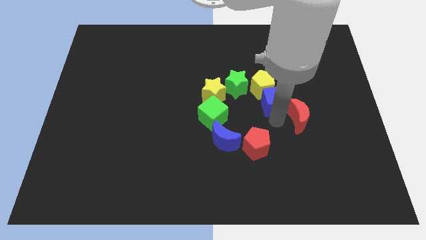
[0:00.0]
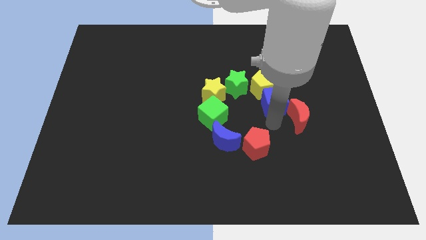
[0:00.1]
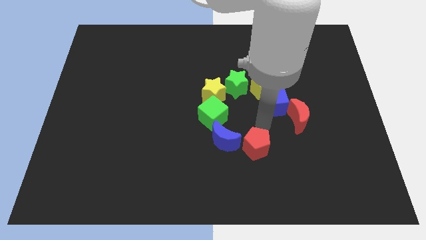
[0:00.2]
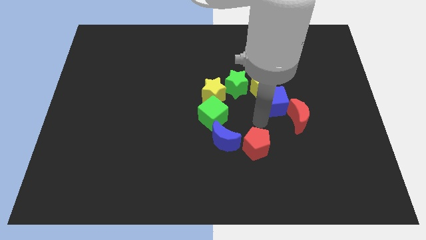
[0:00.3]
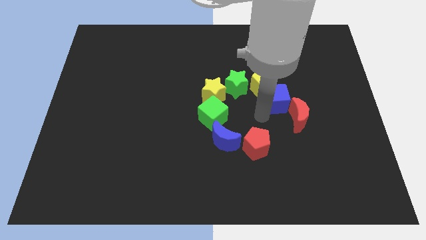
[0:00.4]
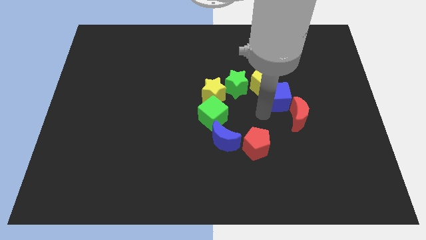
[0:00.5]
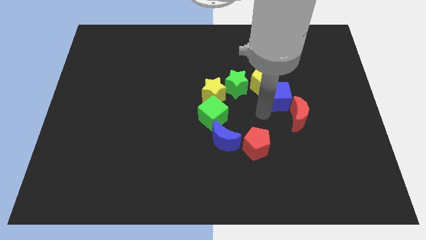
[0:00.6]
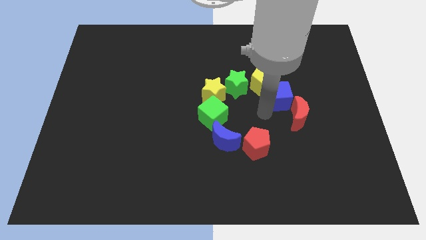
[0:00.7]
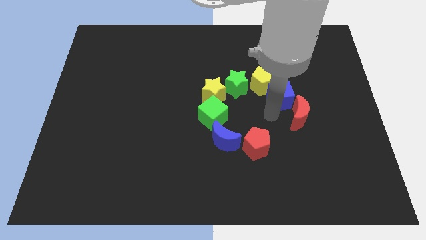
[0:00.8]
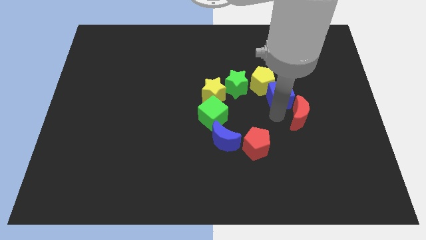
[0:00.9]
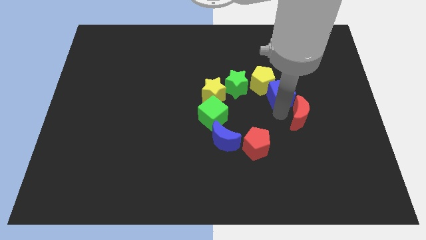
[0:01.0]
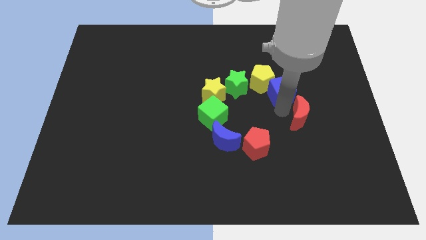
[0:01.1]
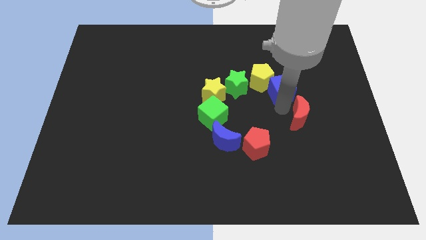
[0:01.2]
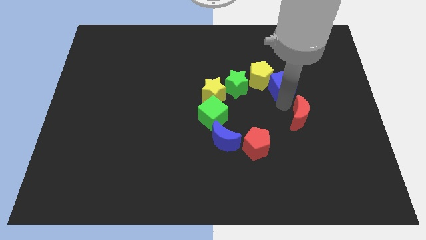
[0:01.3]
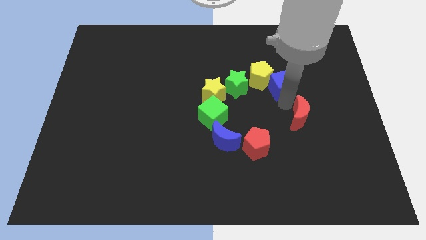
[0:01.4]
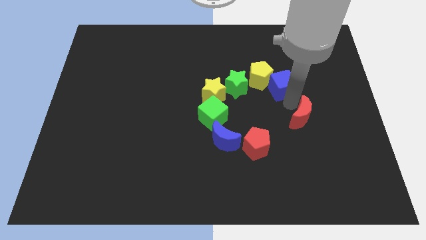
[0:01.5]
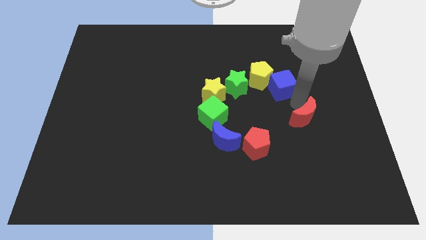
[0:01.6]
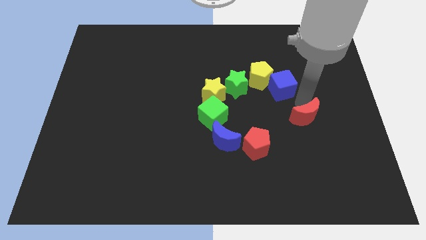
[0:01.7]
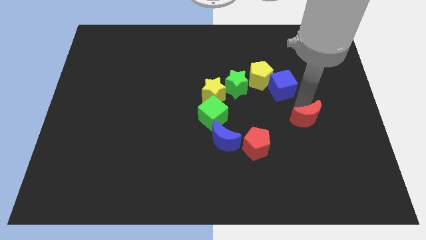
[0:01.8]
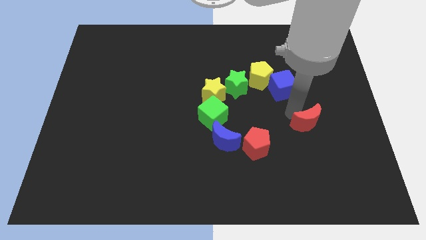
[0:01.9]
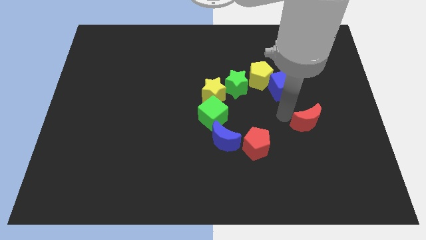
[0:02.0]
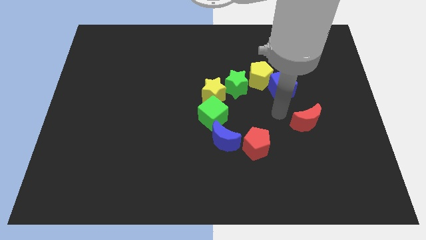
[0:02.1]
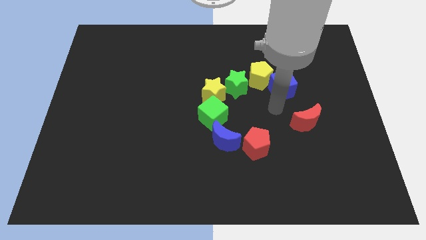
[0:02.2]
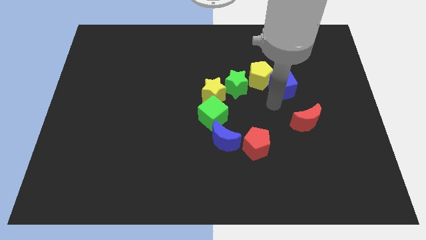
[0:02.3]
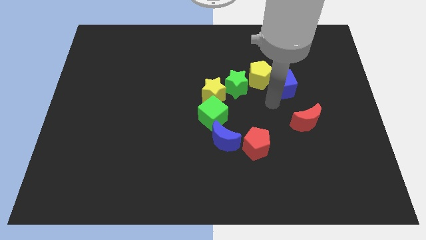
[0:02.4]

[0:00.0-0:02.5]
separate the blue cube and red crescent from each other

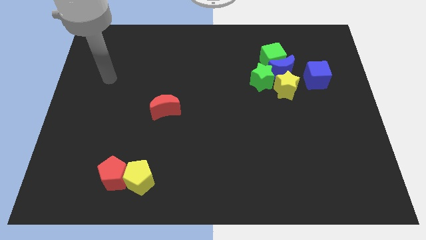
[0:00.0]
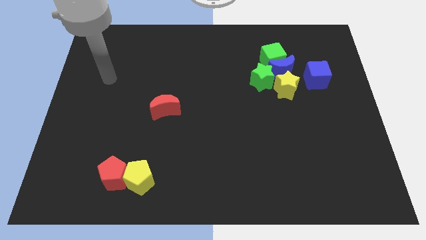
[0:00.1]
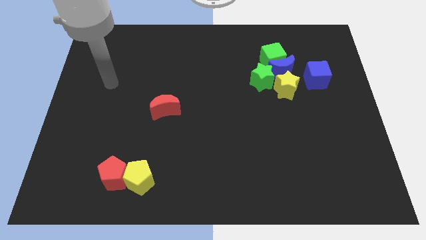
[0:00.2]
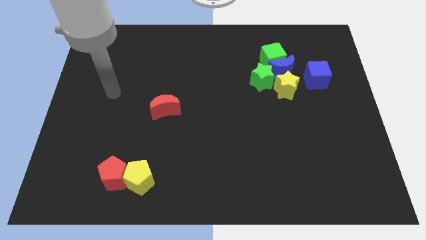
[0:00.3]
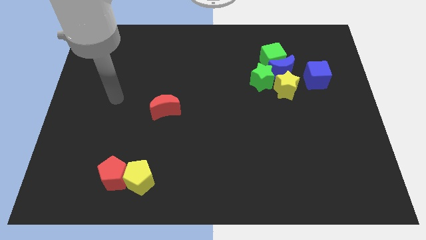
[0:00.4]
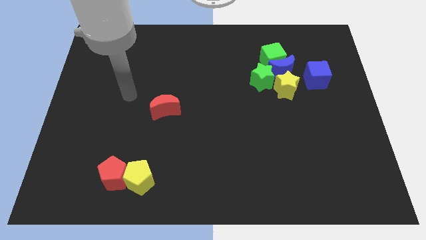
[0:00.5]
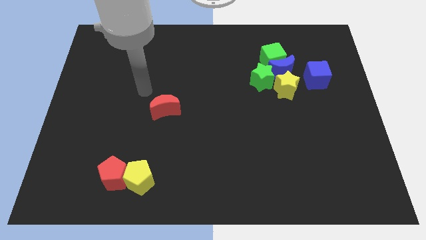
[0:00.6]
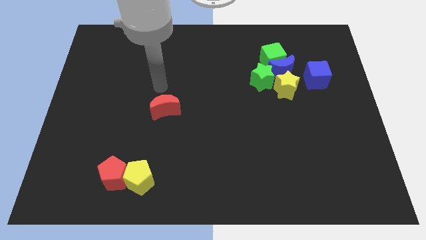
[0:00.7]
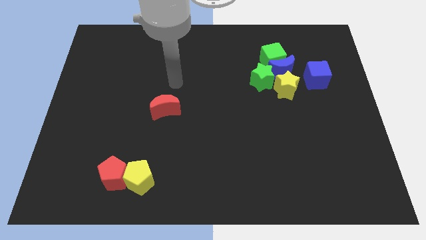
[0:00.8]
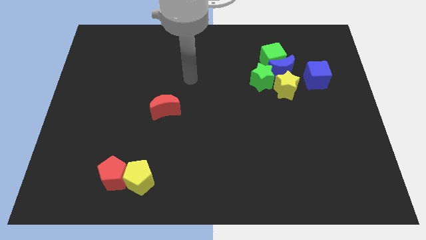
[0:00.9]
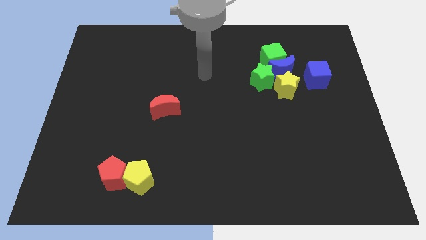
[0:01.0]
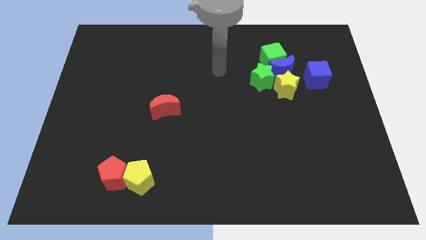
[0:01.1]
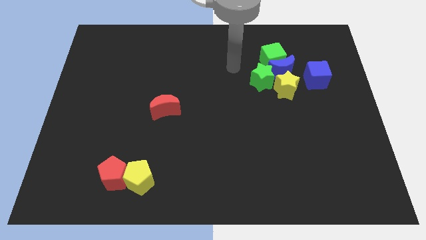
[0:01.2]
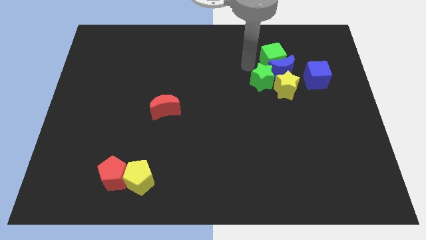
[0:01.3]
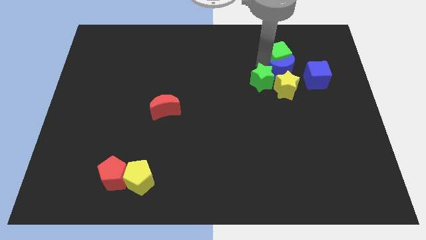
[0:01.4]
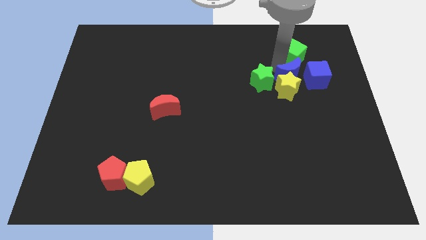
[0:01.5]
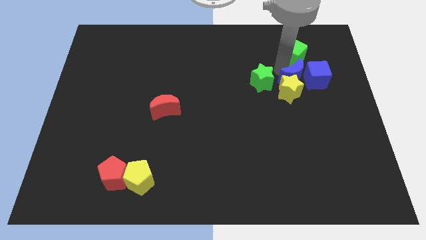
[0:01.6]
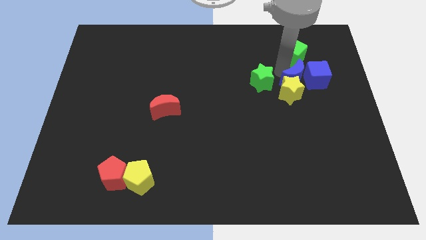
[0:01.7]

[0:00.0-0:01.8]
point your arm near blue moon

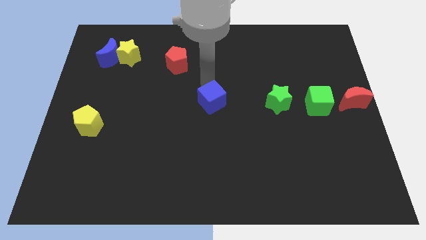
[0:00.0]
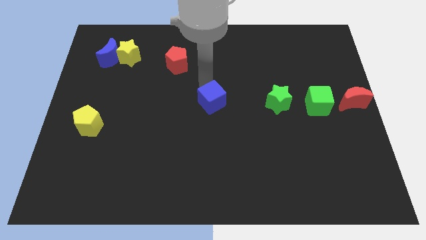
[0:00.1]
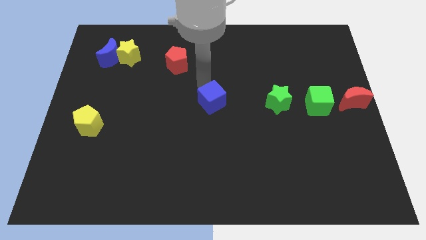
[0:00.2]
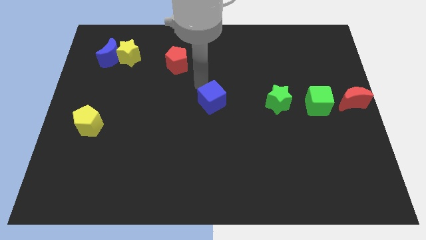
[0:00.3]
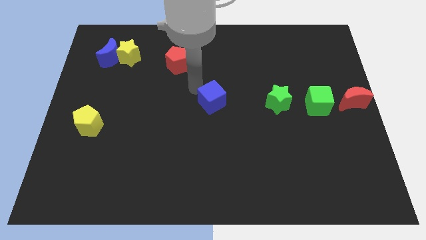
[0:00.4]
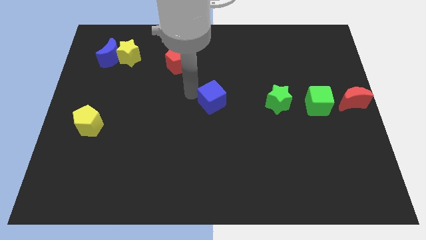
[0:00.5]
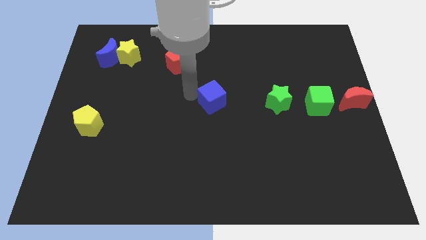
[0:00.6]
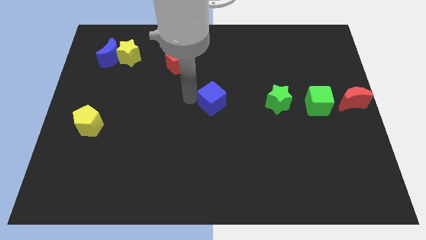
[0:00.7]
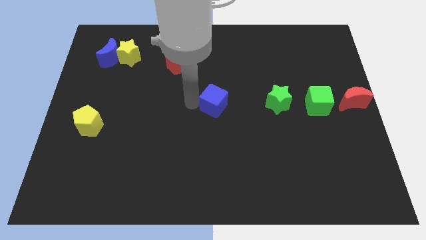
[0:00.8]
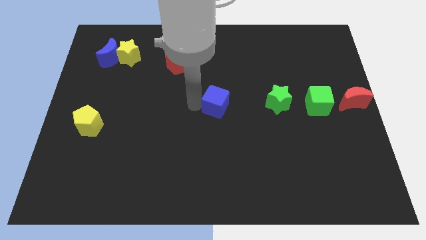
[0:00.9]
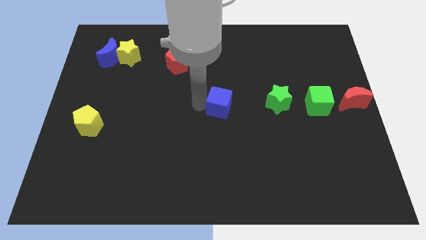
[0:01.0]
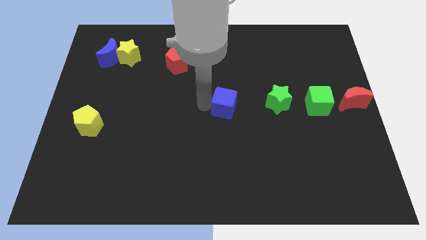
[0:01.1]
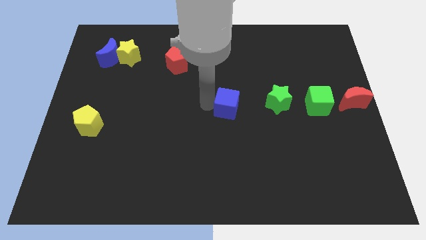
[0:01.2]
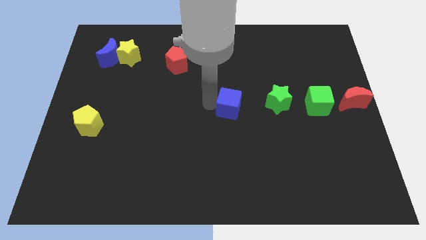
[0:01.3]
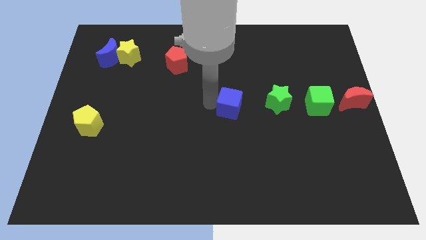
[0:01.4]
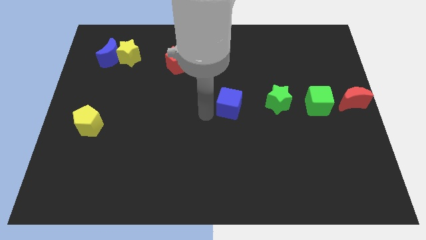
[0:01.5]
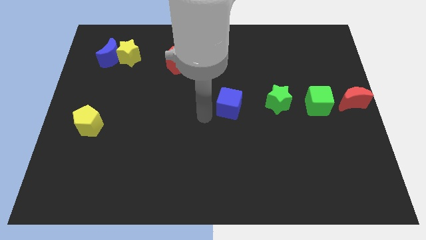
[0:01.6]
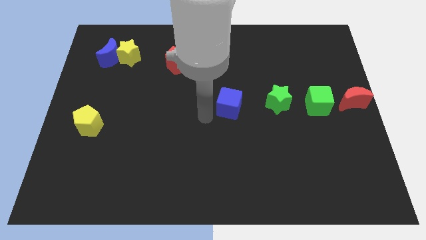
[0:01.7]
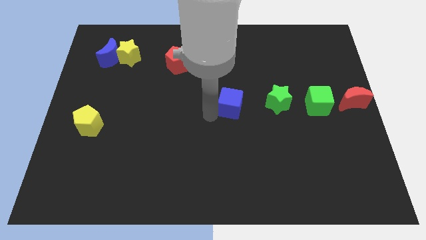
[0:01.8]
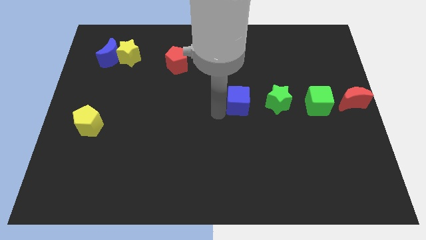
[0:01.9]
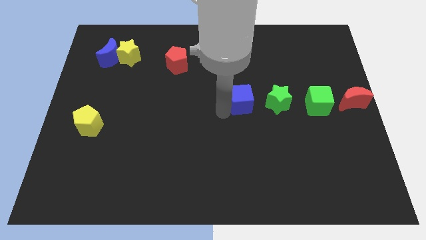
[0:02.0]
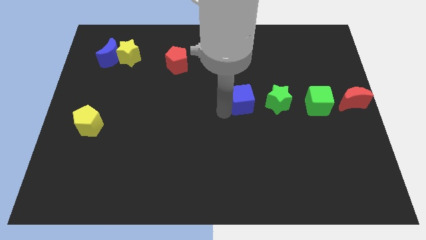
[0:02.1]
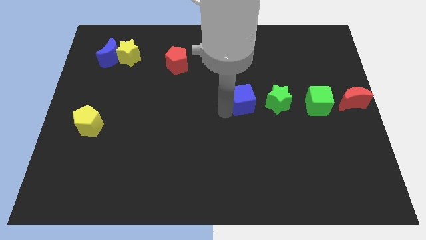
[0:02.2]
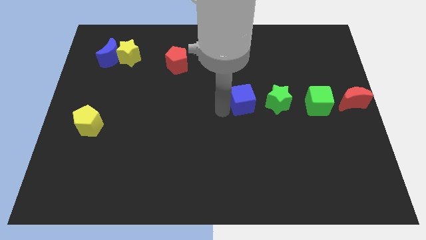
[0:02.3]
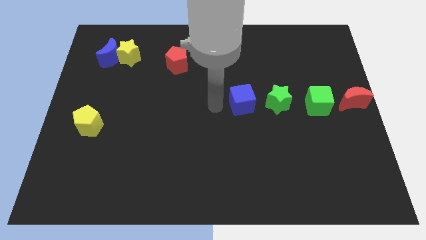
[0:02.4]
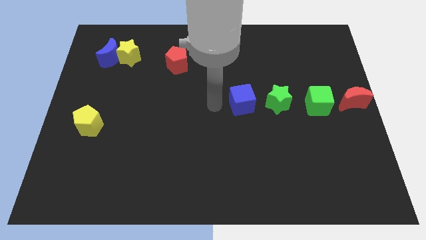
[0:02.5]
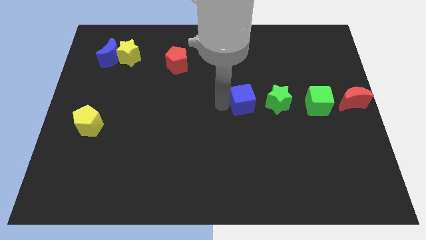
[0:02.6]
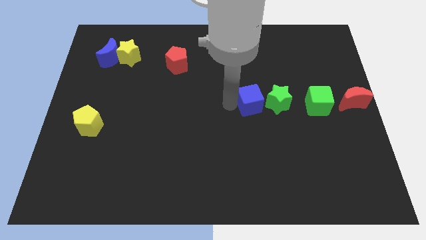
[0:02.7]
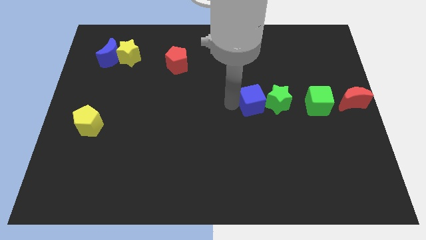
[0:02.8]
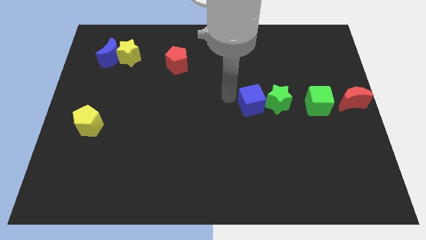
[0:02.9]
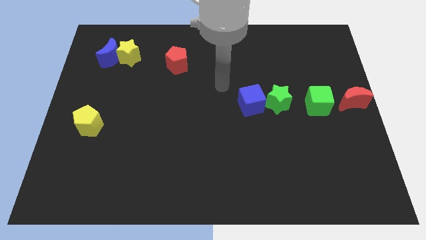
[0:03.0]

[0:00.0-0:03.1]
place the blue cube at the left of the green star

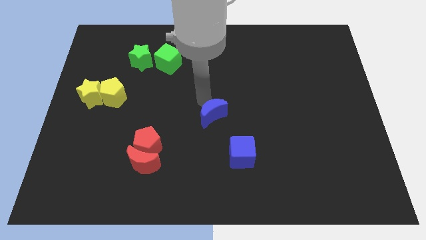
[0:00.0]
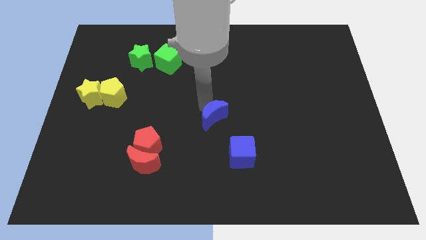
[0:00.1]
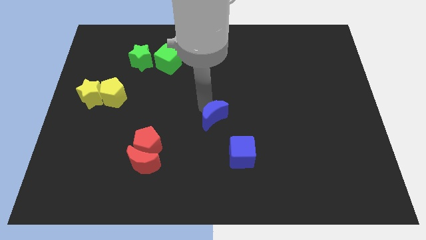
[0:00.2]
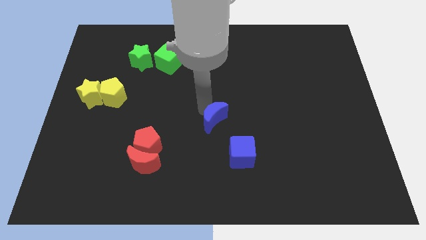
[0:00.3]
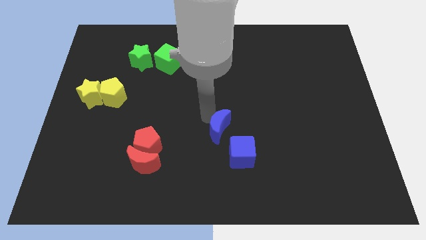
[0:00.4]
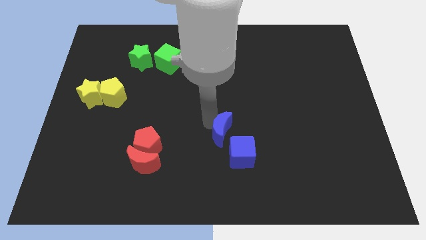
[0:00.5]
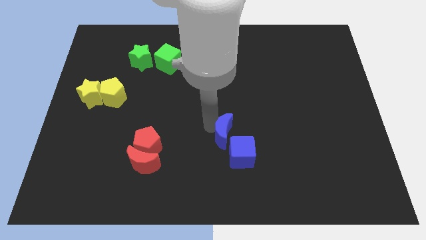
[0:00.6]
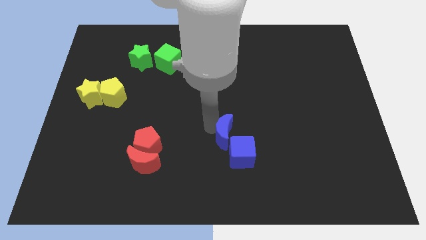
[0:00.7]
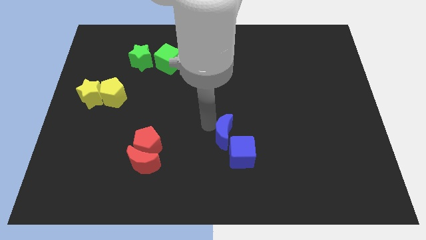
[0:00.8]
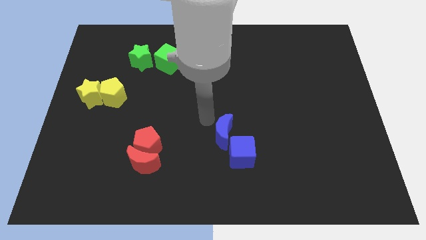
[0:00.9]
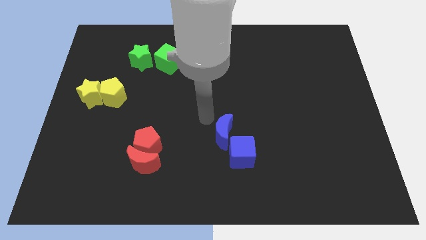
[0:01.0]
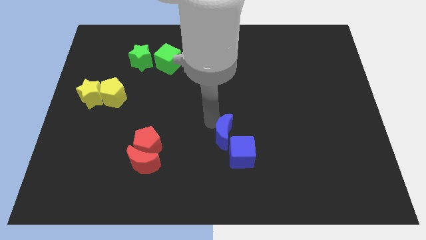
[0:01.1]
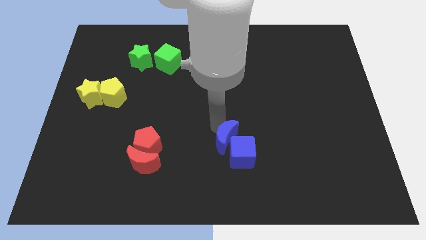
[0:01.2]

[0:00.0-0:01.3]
push the blue crescent into the blue cube

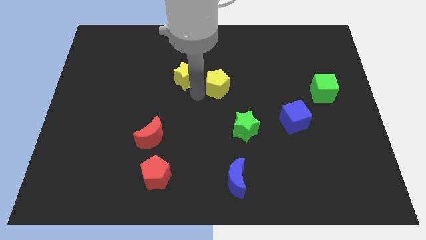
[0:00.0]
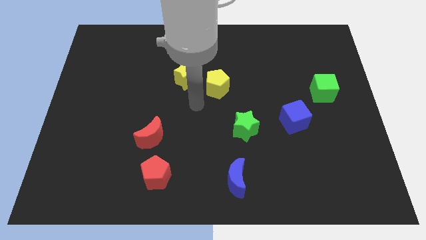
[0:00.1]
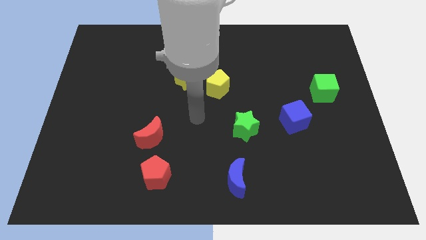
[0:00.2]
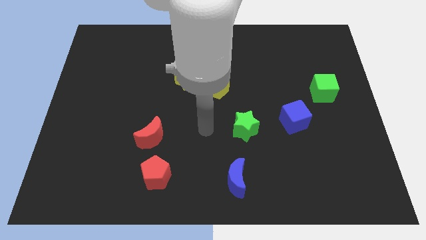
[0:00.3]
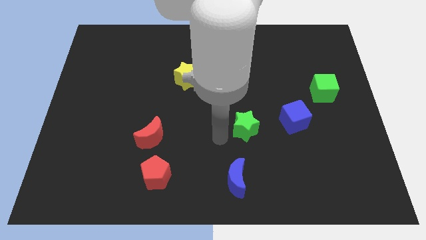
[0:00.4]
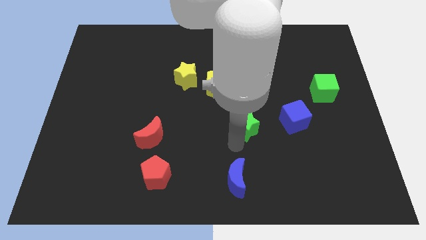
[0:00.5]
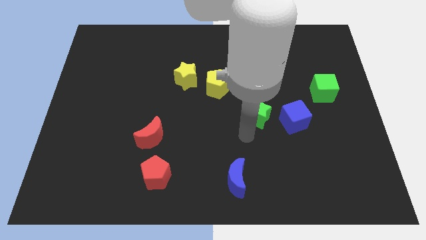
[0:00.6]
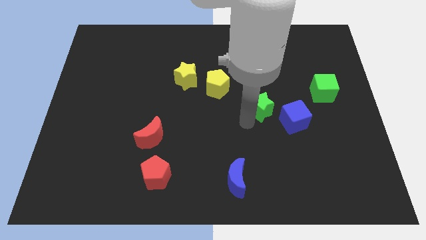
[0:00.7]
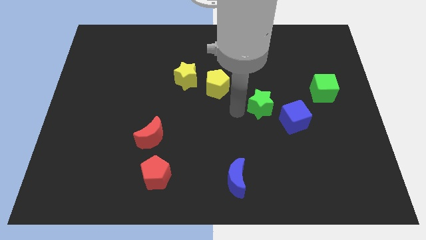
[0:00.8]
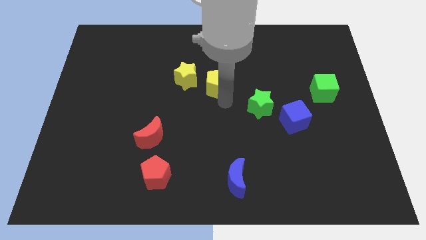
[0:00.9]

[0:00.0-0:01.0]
move the green star to the top left of the blue cube
